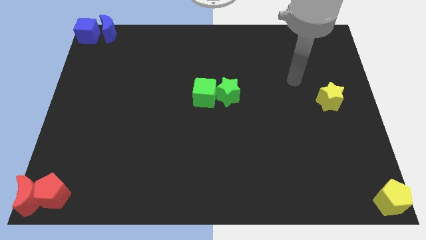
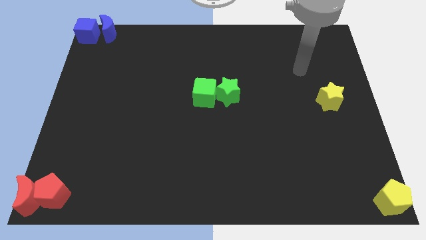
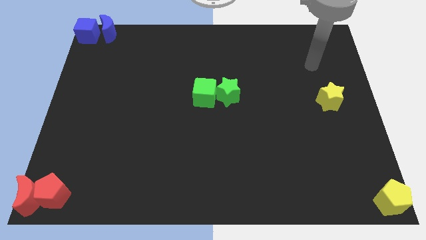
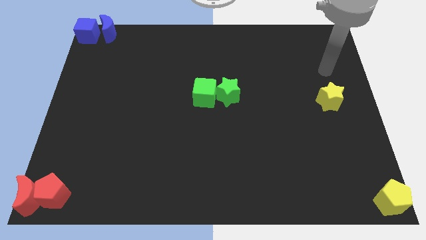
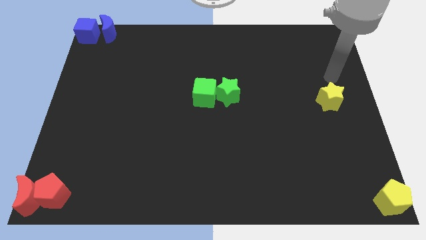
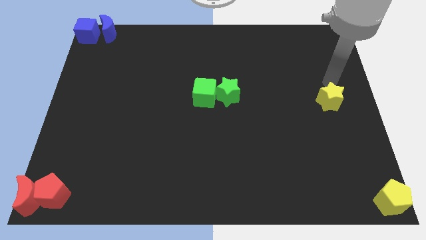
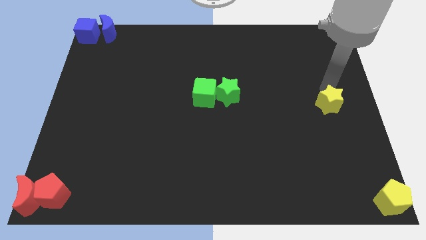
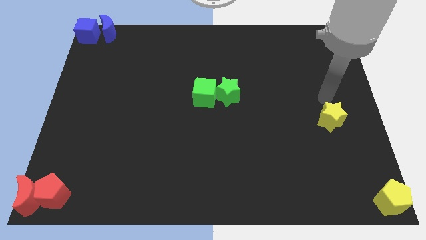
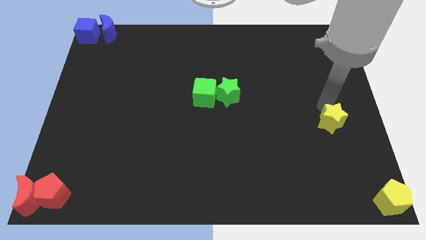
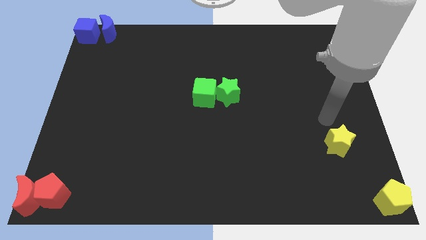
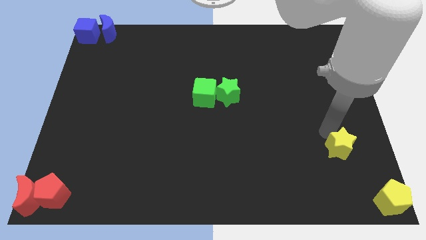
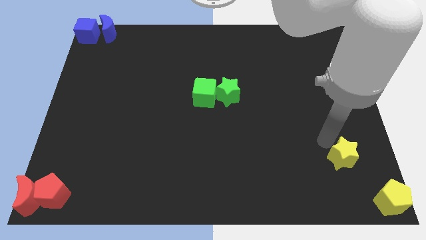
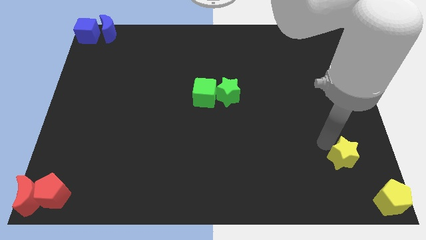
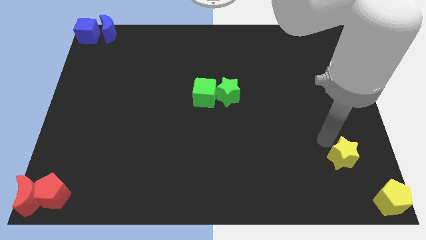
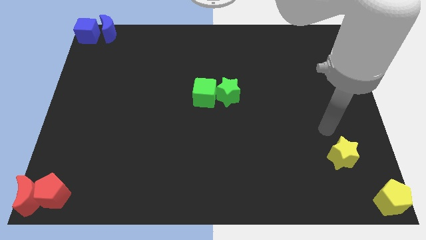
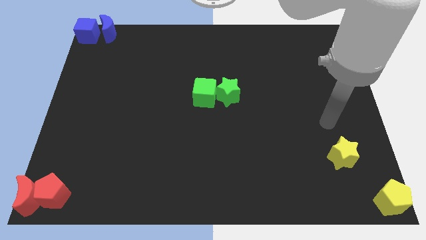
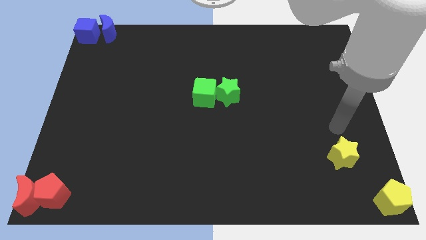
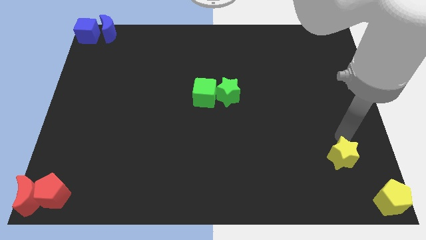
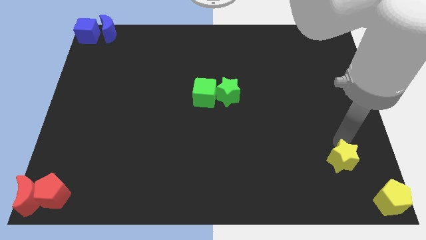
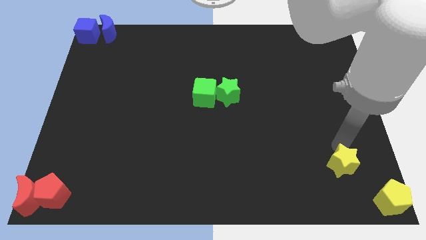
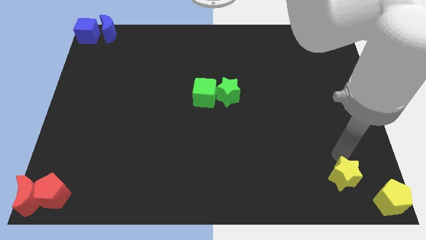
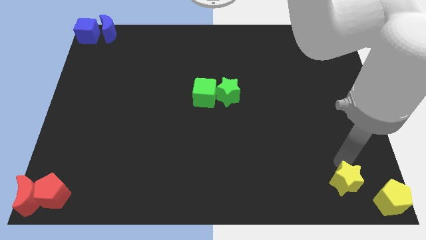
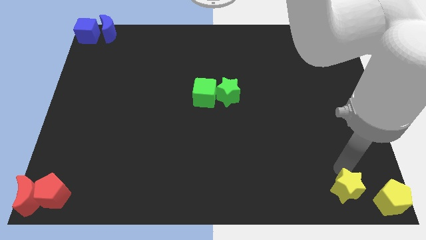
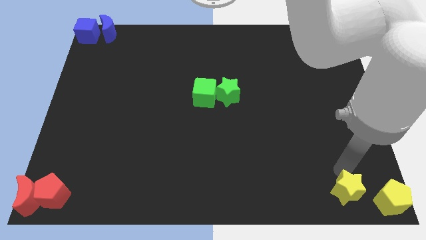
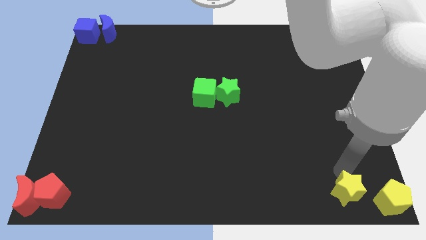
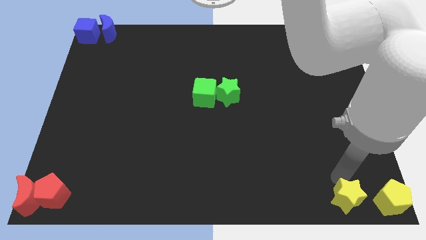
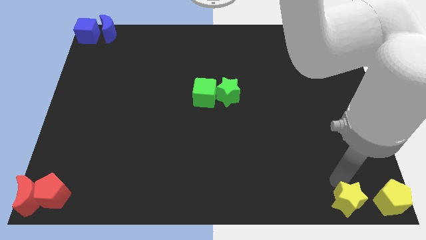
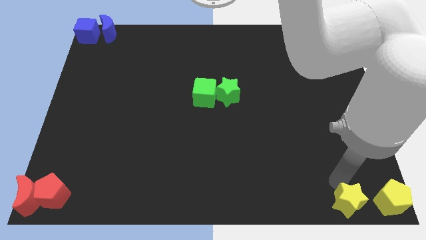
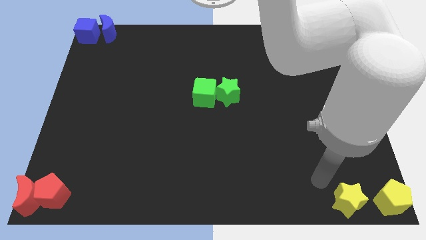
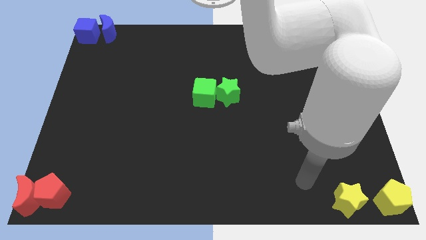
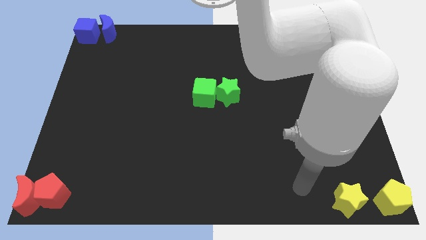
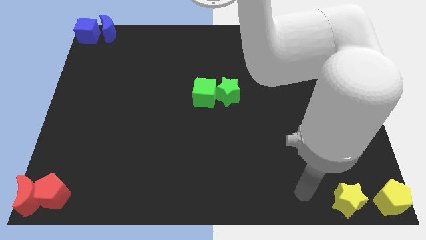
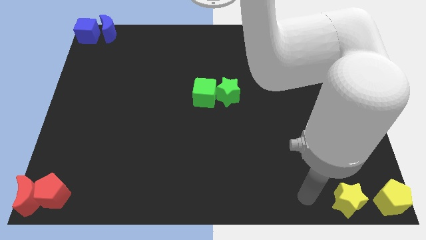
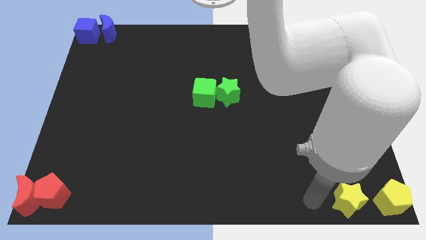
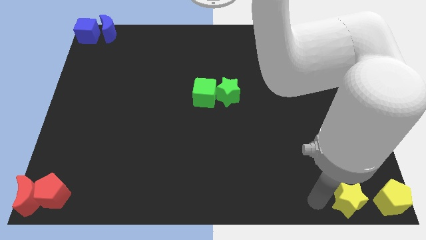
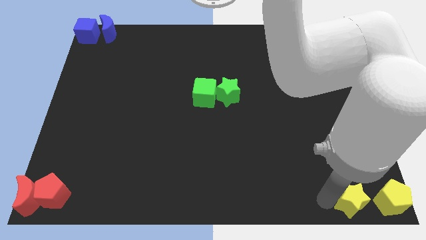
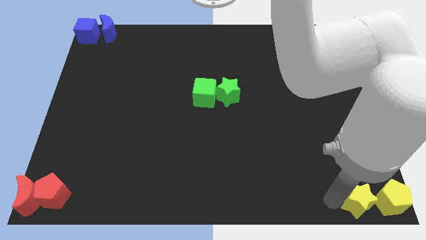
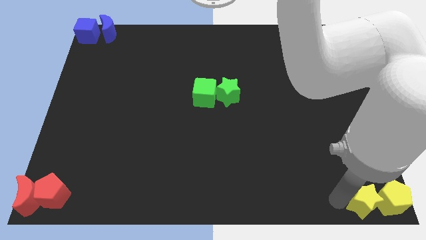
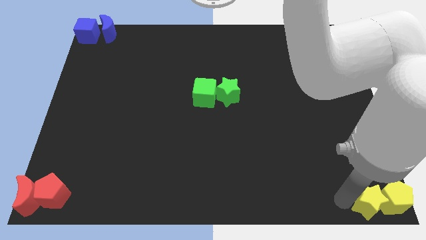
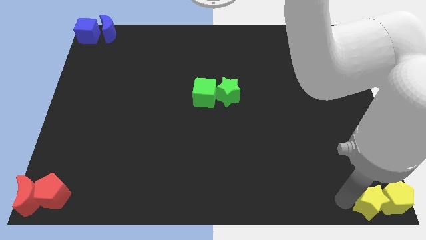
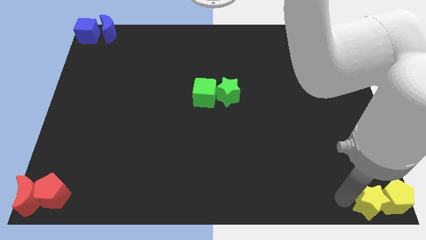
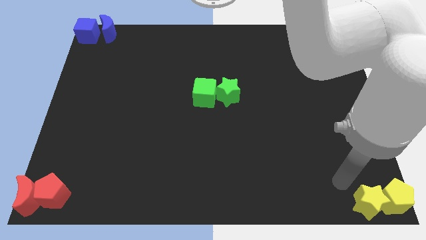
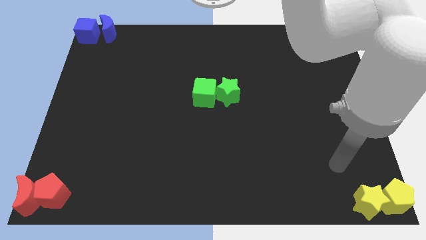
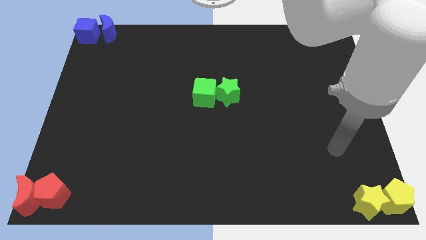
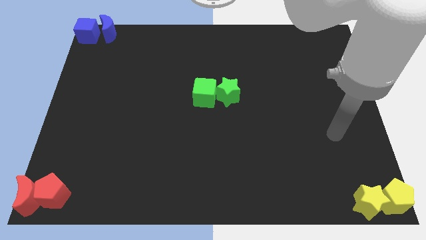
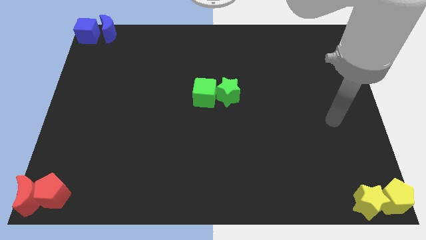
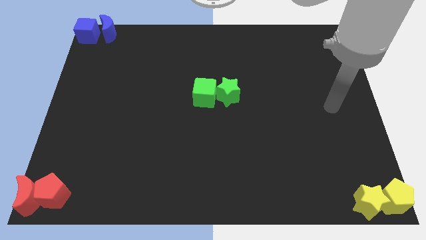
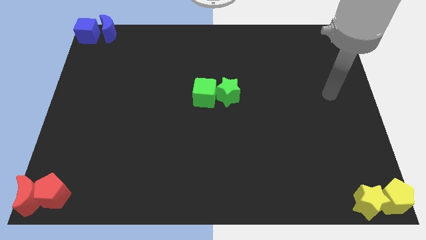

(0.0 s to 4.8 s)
push the yellow star into the yellow pentagon

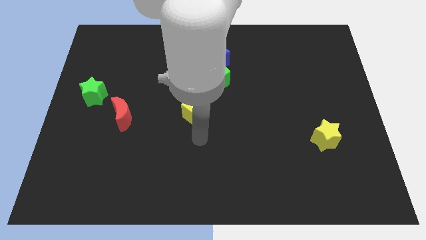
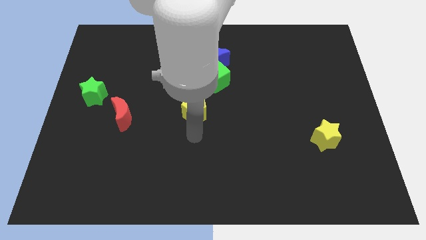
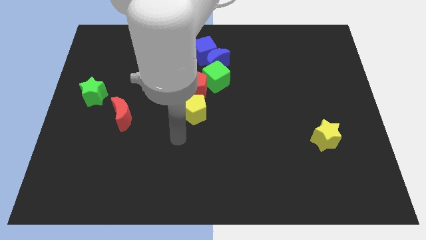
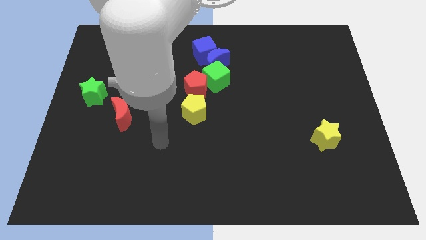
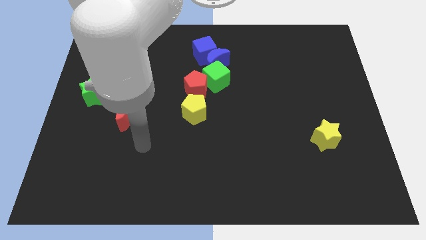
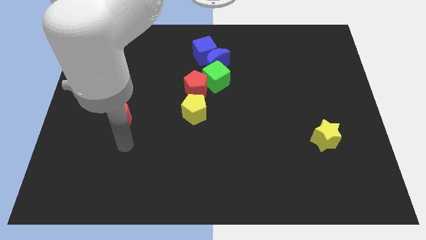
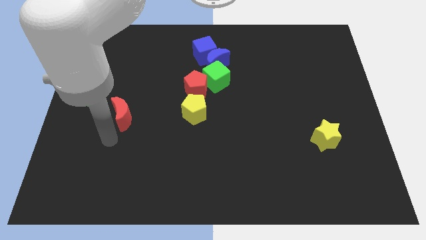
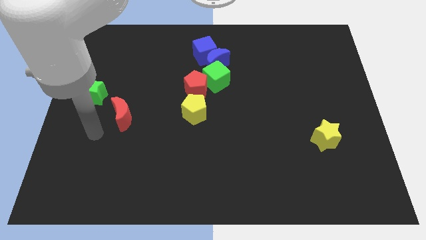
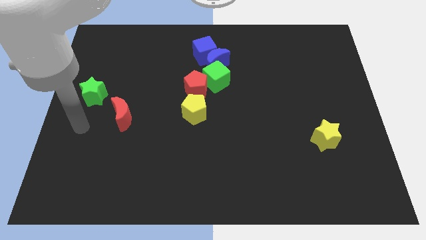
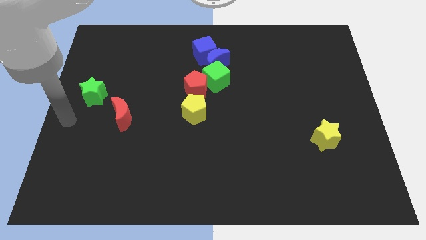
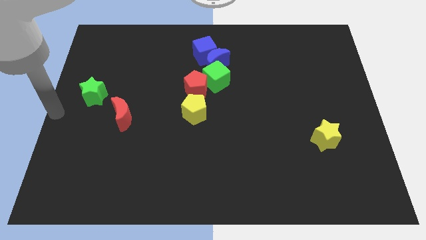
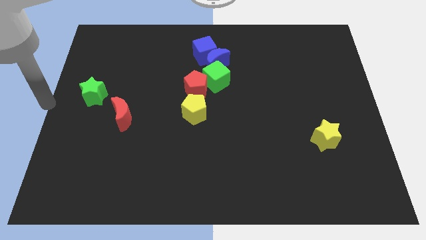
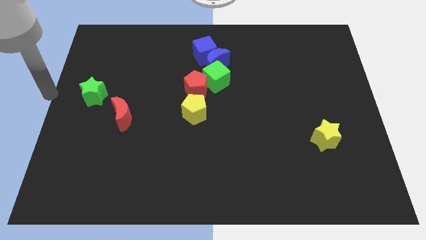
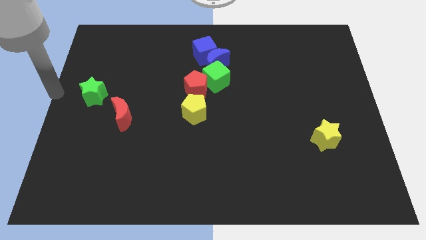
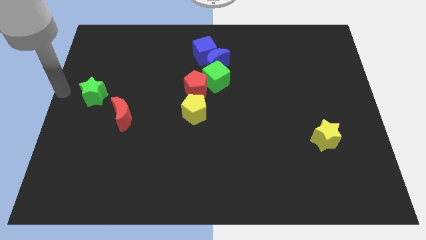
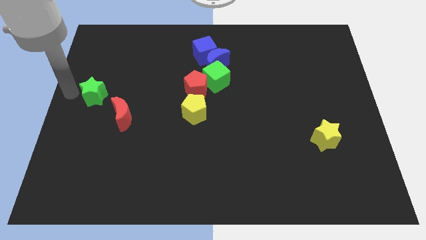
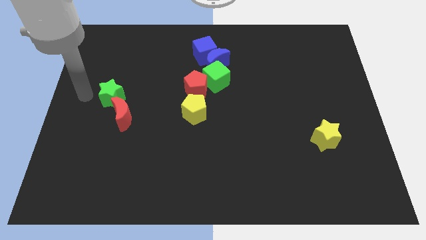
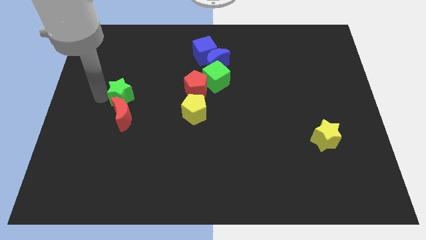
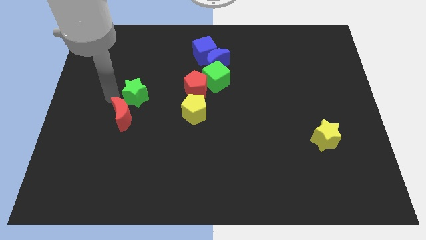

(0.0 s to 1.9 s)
move the green star towards the right

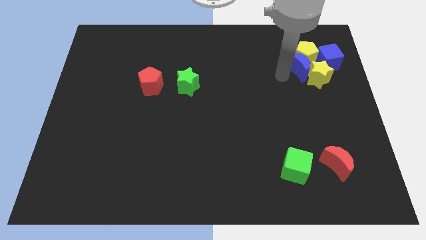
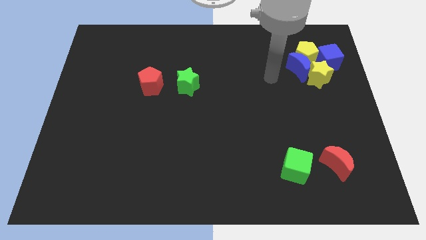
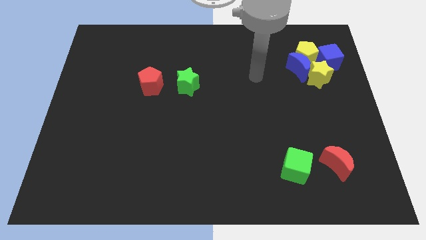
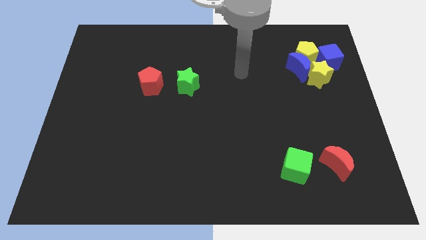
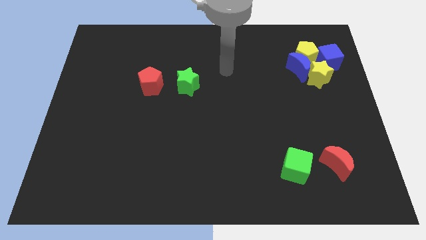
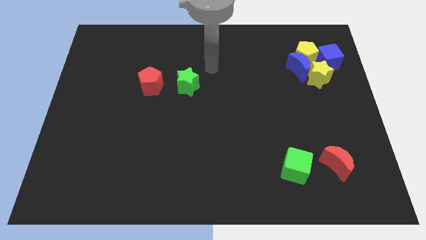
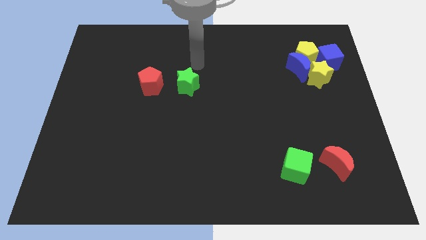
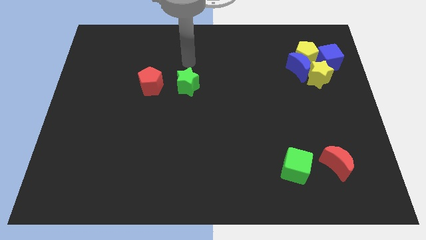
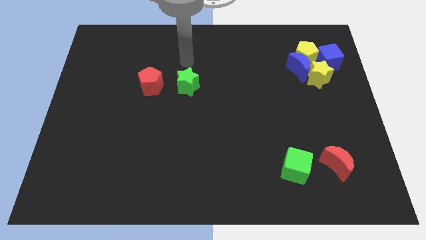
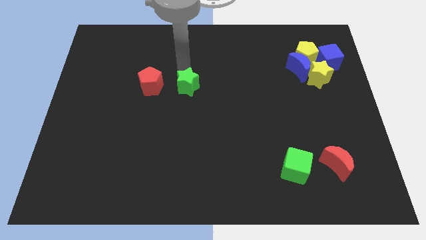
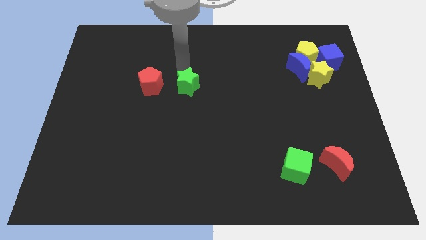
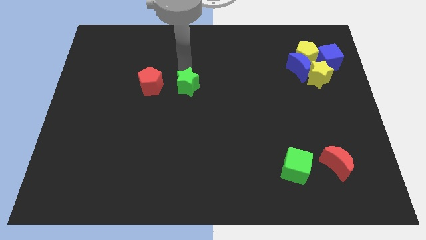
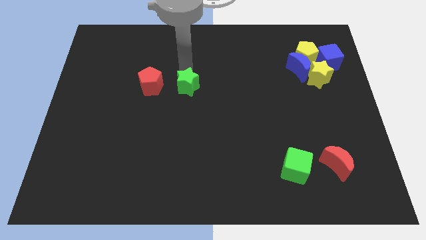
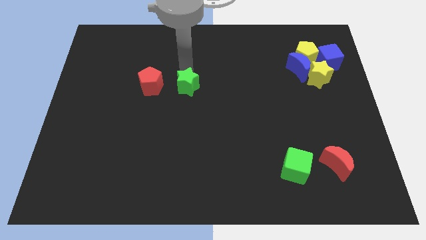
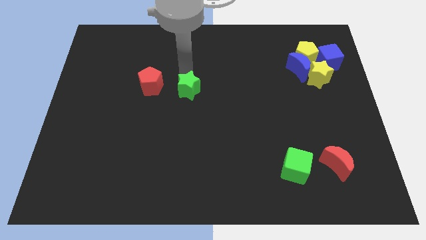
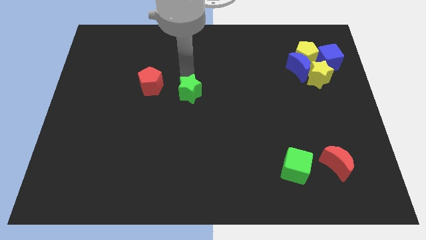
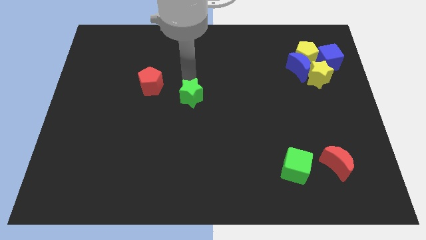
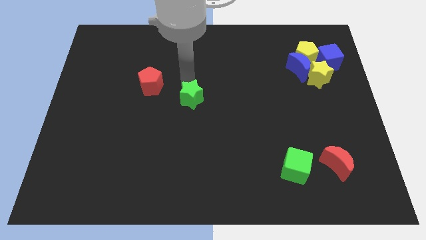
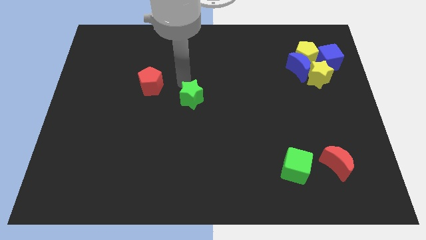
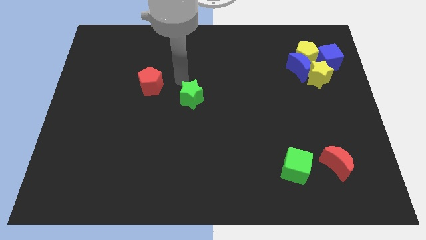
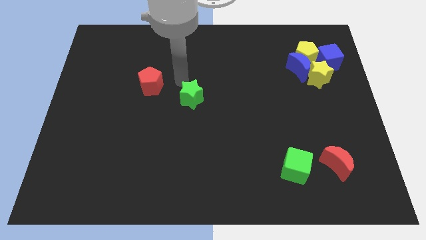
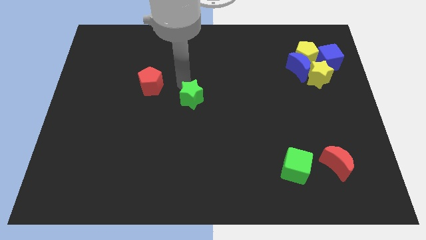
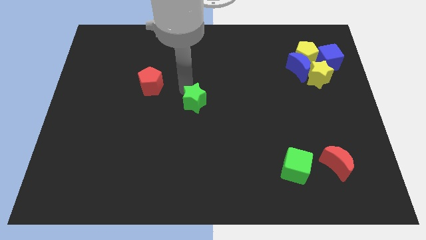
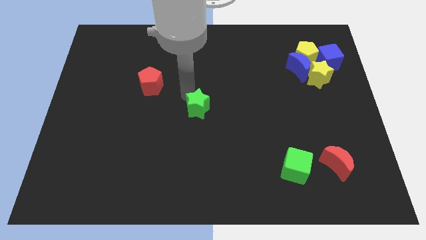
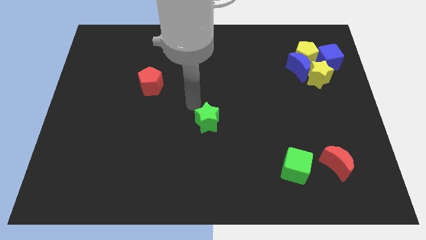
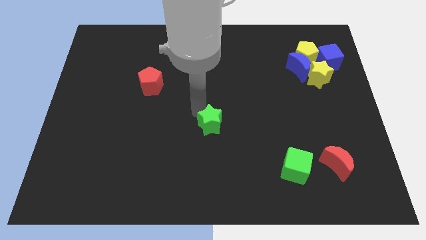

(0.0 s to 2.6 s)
move the green star to the center of the board
